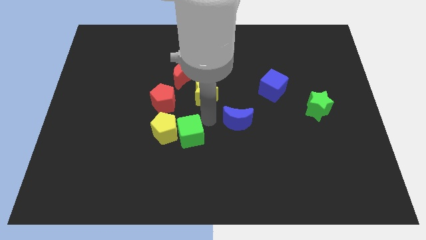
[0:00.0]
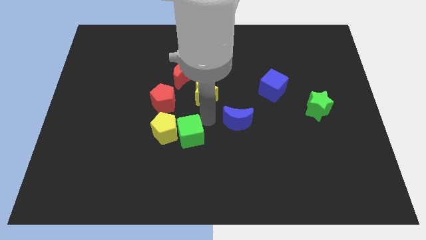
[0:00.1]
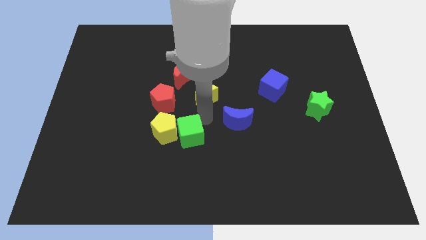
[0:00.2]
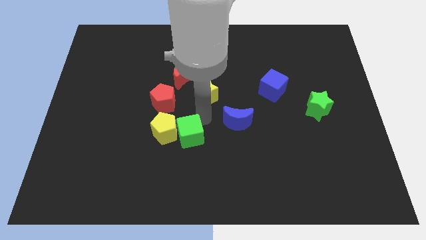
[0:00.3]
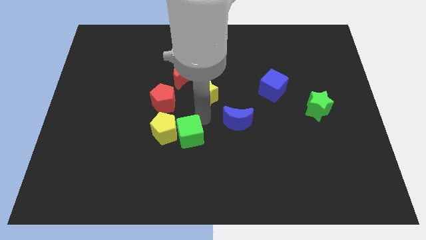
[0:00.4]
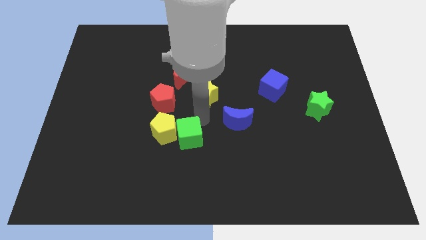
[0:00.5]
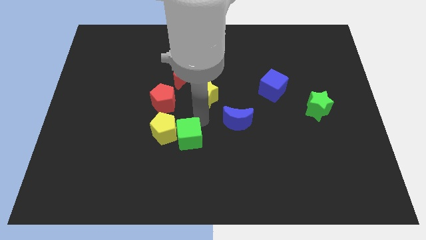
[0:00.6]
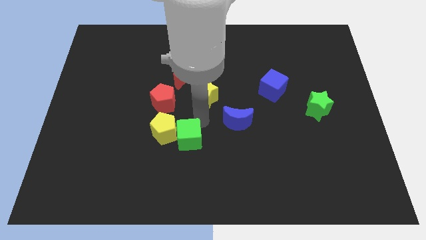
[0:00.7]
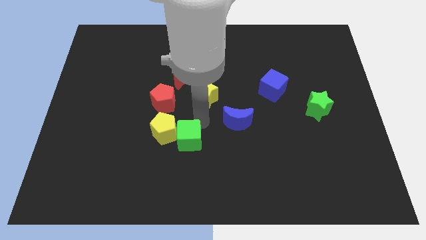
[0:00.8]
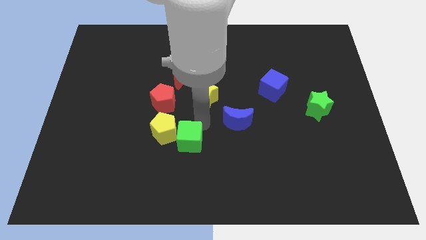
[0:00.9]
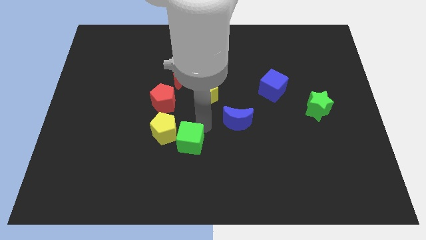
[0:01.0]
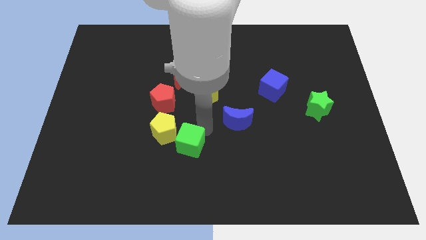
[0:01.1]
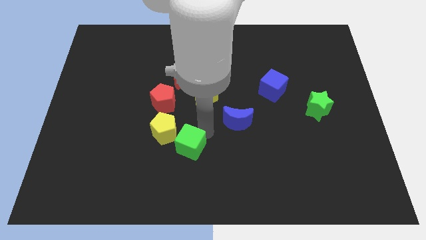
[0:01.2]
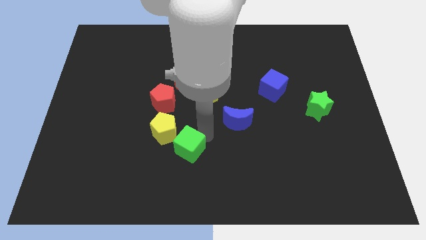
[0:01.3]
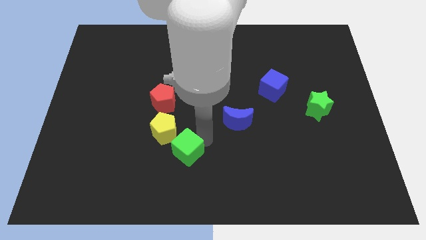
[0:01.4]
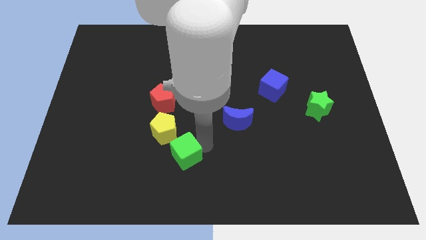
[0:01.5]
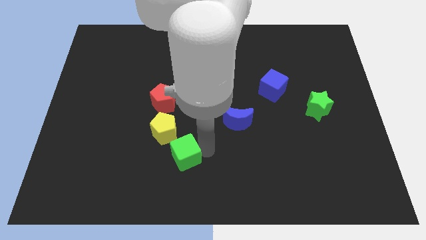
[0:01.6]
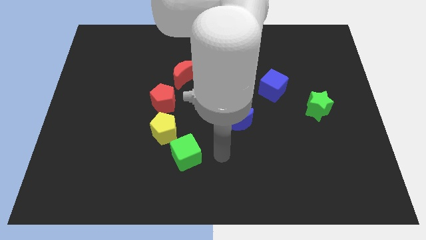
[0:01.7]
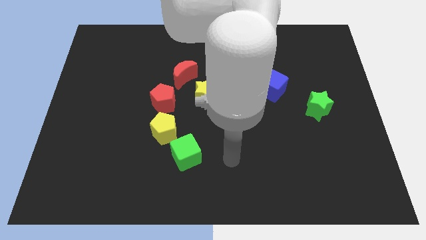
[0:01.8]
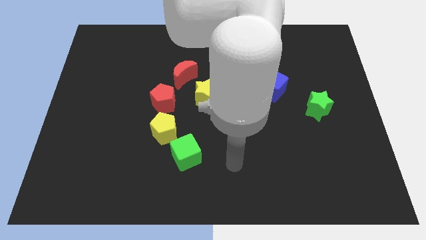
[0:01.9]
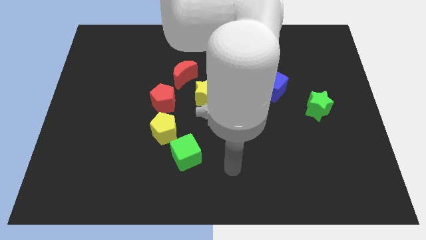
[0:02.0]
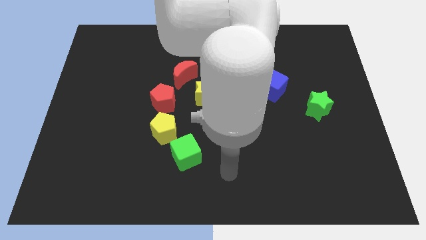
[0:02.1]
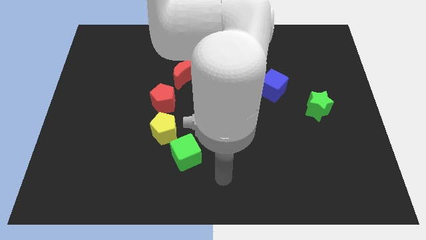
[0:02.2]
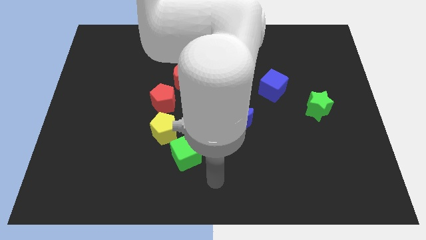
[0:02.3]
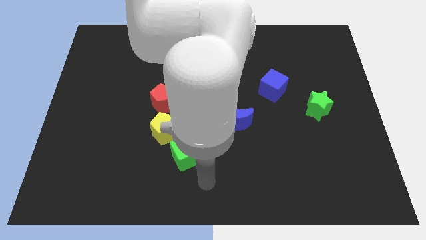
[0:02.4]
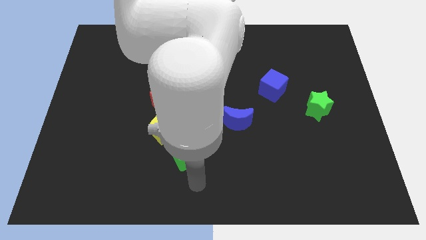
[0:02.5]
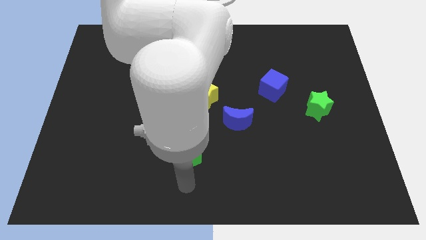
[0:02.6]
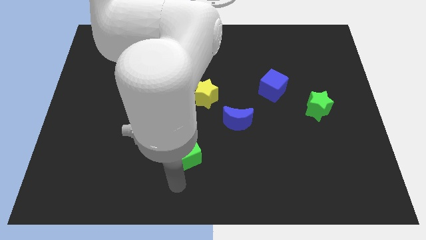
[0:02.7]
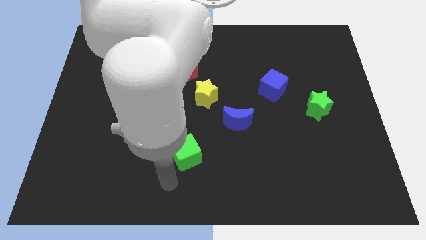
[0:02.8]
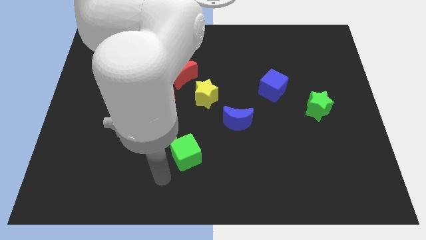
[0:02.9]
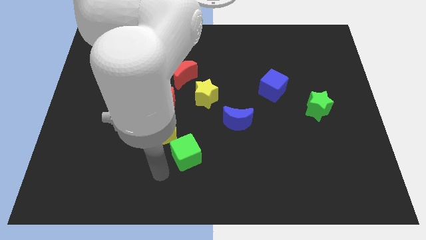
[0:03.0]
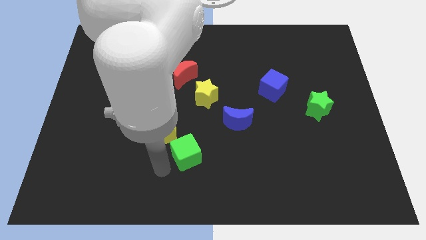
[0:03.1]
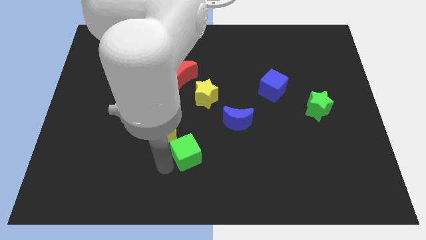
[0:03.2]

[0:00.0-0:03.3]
move green right below the yellow star

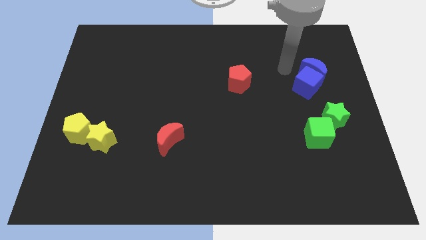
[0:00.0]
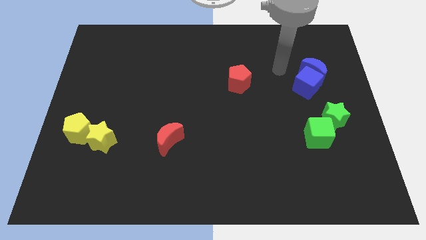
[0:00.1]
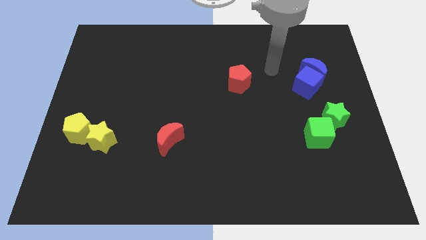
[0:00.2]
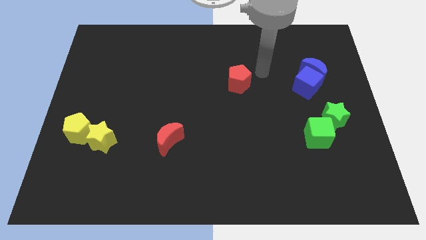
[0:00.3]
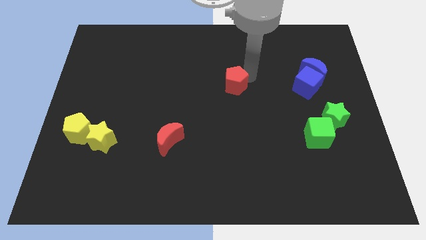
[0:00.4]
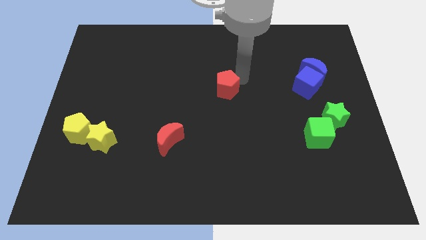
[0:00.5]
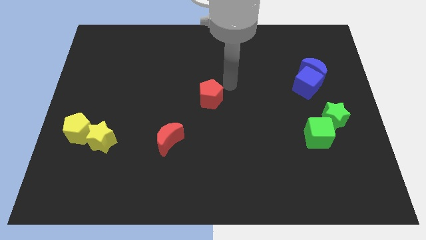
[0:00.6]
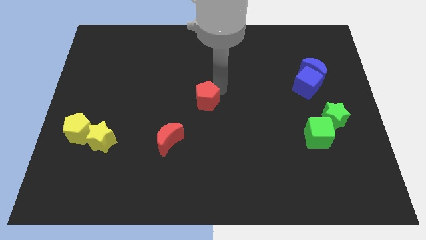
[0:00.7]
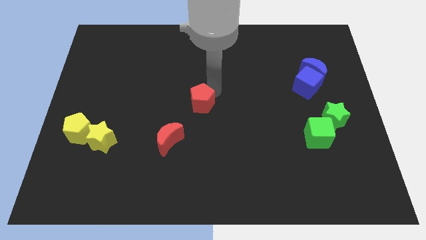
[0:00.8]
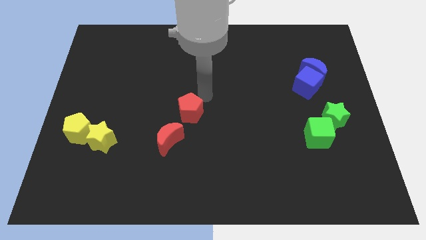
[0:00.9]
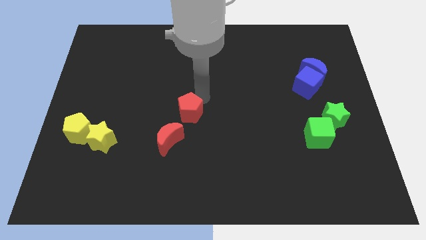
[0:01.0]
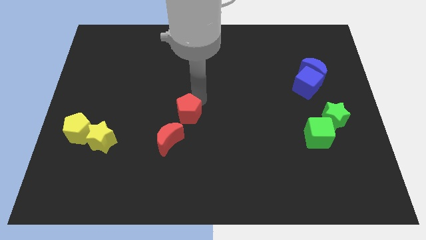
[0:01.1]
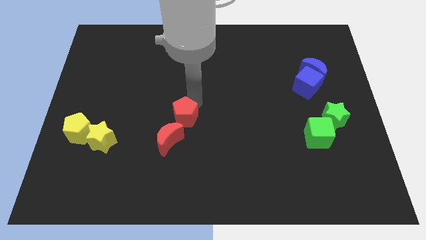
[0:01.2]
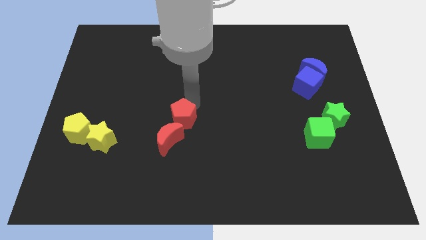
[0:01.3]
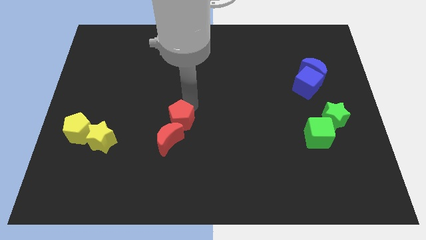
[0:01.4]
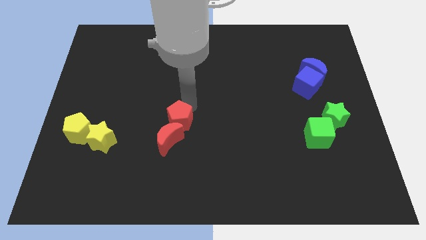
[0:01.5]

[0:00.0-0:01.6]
place the red pentagon towards the top right side of the red crescent

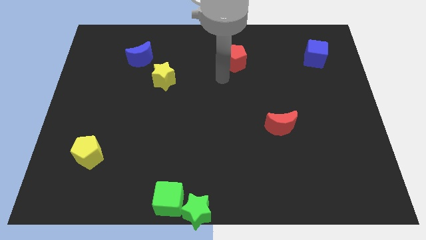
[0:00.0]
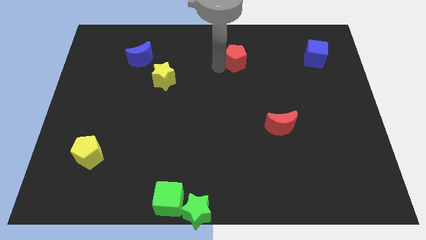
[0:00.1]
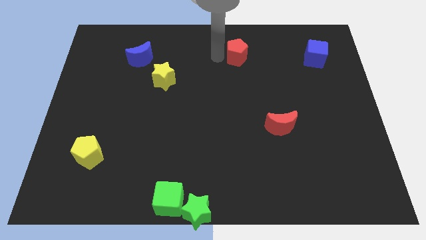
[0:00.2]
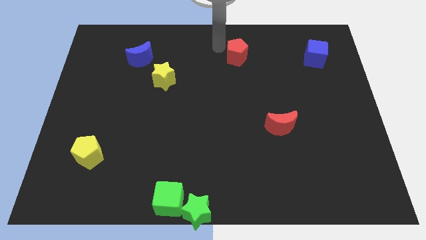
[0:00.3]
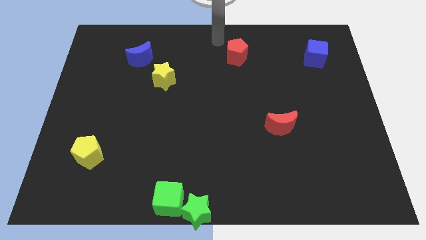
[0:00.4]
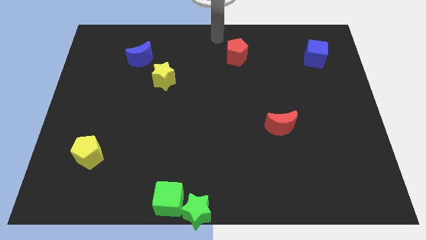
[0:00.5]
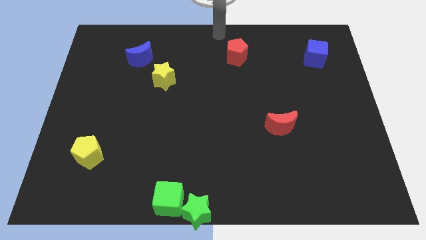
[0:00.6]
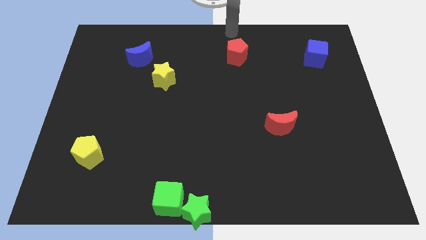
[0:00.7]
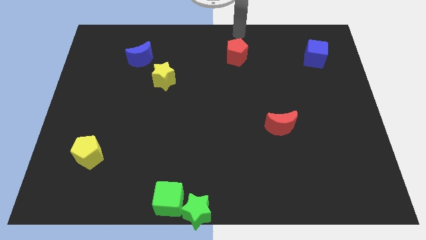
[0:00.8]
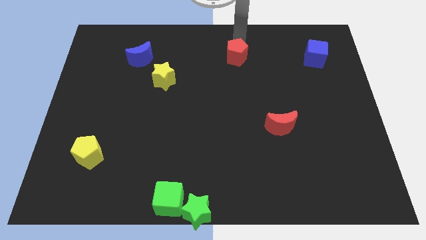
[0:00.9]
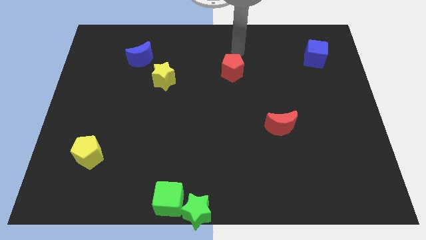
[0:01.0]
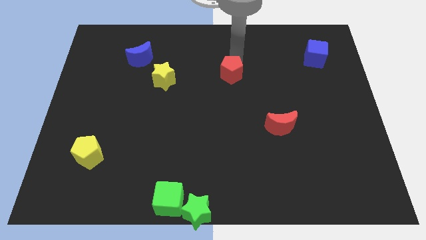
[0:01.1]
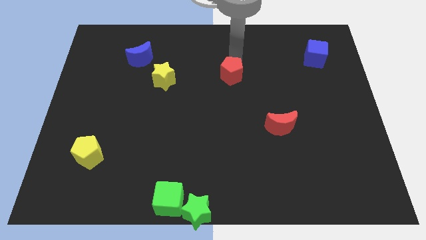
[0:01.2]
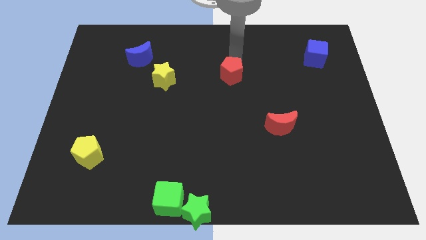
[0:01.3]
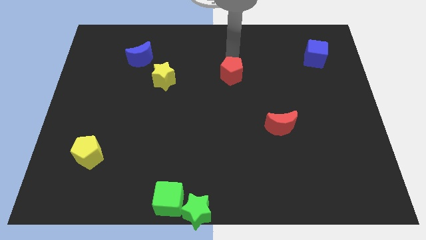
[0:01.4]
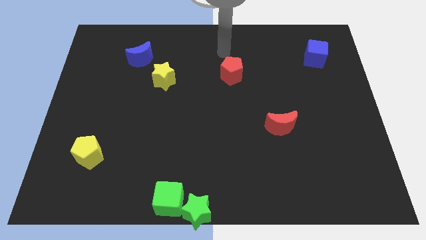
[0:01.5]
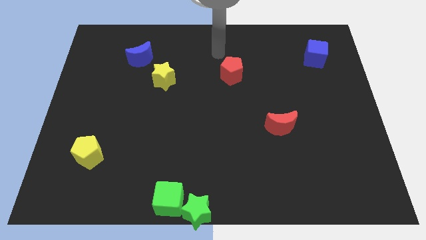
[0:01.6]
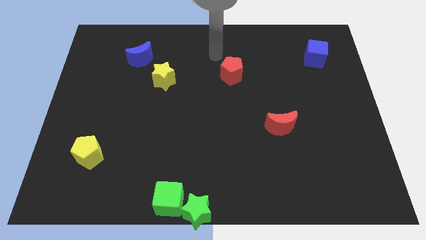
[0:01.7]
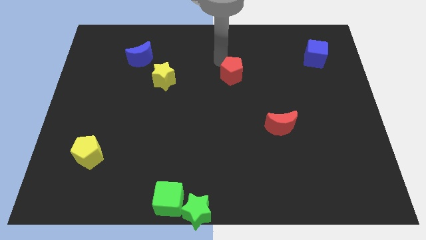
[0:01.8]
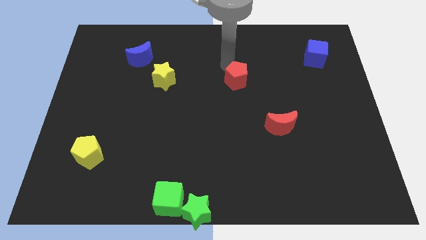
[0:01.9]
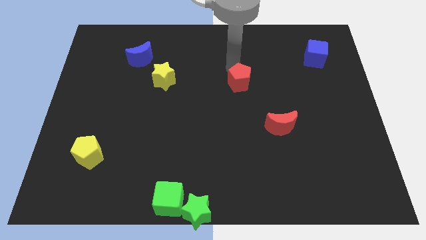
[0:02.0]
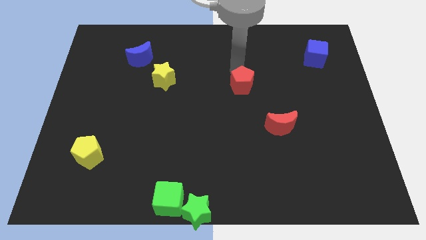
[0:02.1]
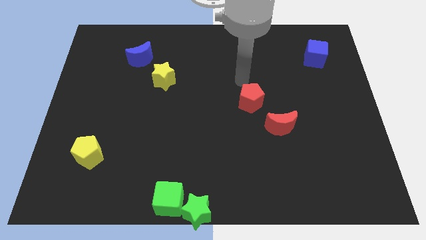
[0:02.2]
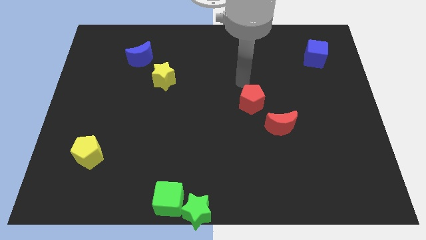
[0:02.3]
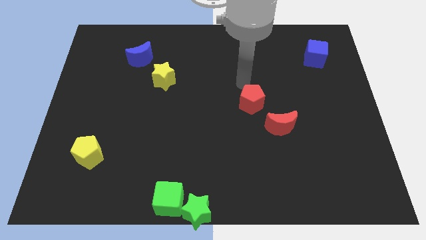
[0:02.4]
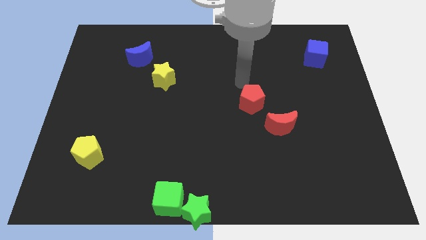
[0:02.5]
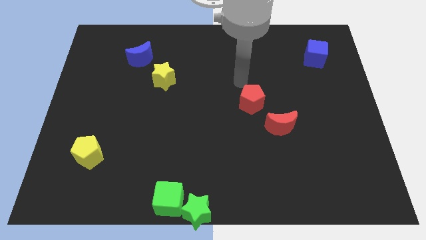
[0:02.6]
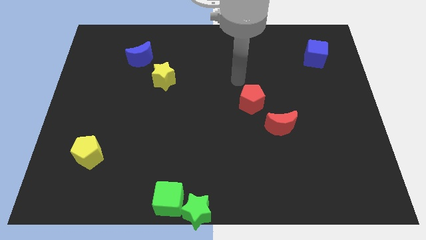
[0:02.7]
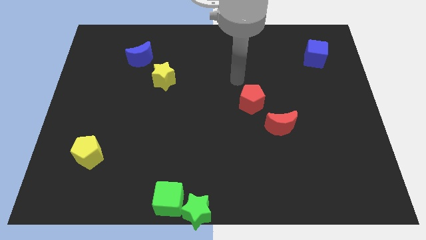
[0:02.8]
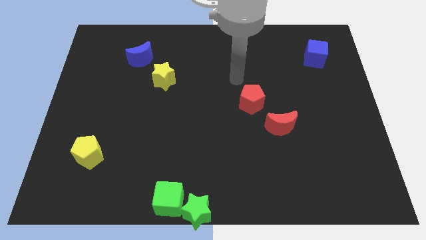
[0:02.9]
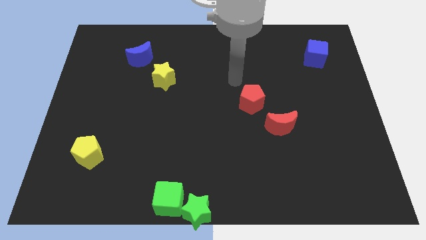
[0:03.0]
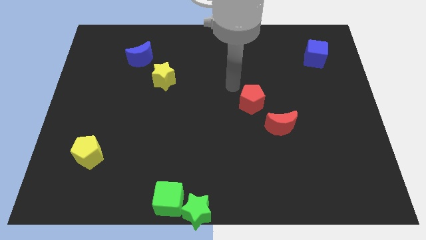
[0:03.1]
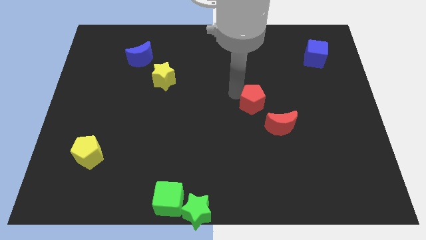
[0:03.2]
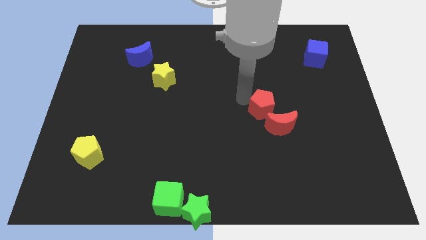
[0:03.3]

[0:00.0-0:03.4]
push the red pentagon at the top left side of the red moon

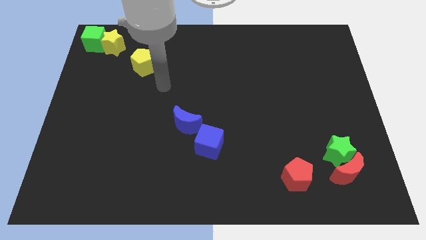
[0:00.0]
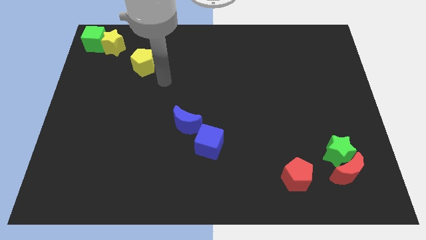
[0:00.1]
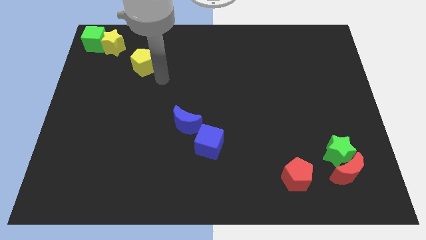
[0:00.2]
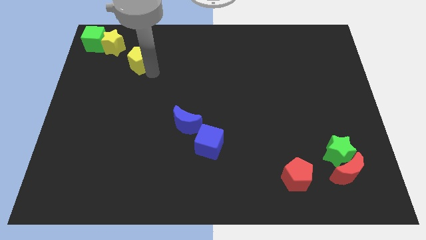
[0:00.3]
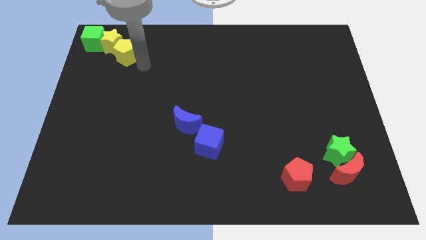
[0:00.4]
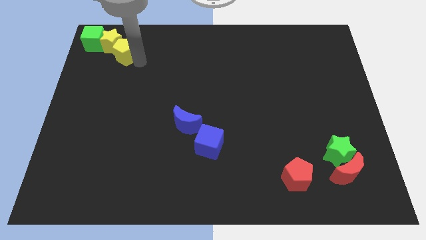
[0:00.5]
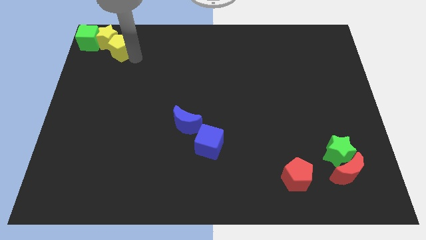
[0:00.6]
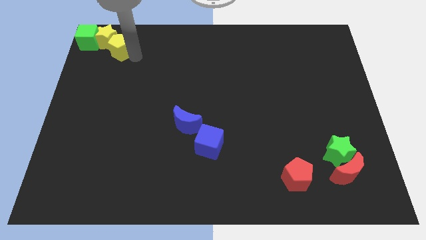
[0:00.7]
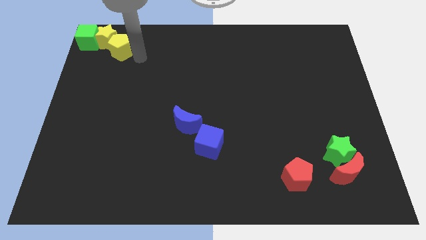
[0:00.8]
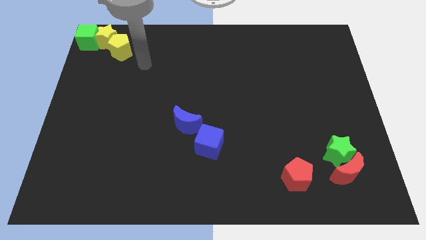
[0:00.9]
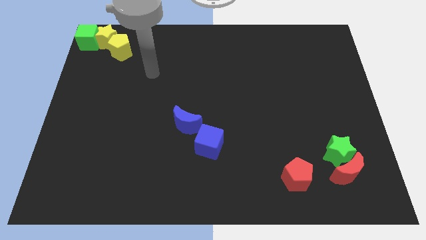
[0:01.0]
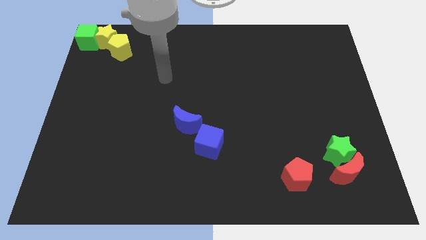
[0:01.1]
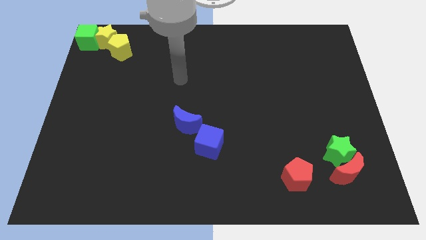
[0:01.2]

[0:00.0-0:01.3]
move the yellow pentagon under the yellow star
